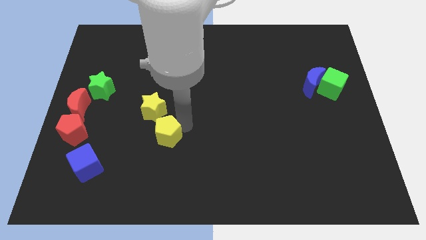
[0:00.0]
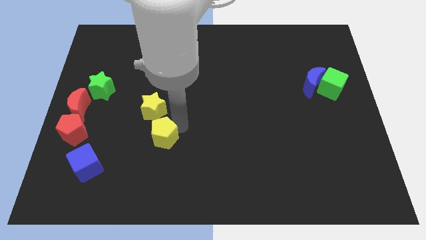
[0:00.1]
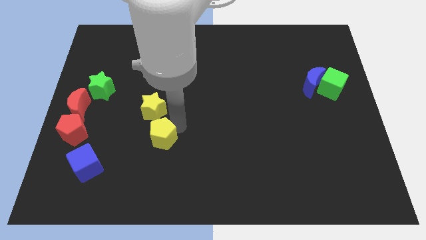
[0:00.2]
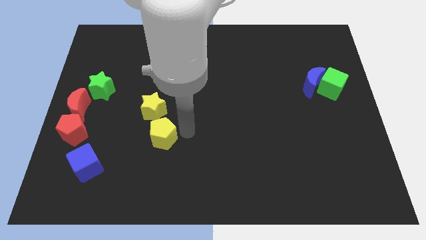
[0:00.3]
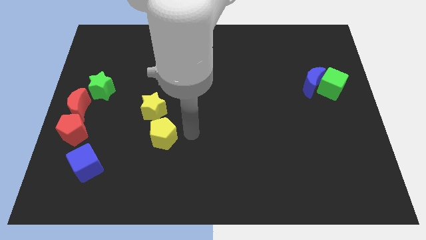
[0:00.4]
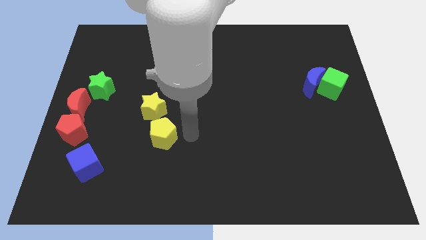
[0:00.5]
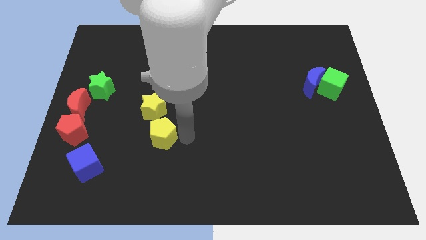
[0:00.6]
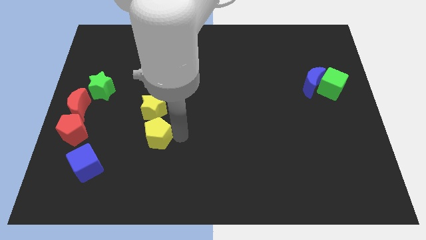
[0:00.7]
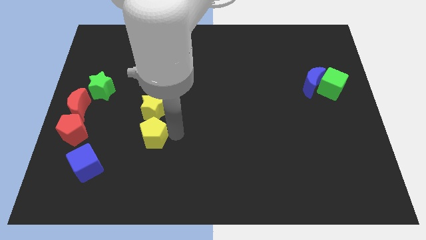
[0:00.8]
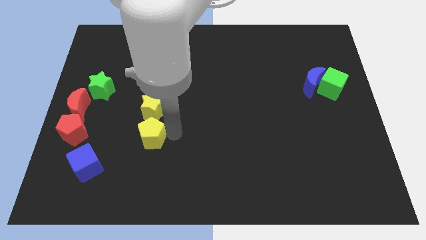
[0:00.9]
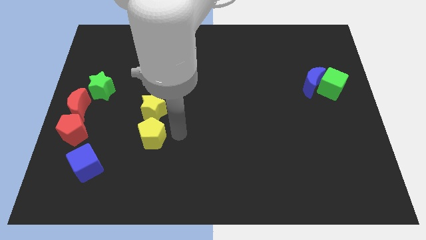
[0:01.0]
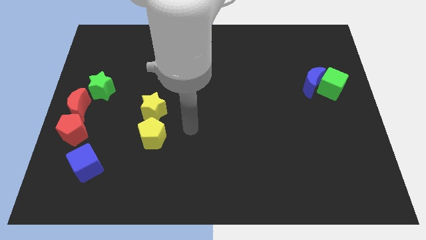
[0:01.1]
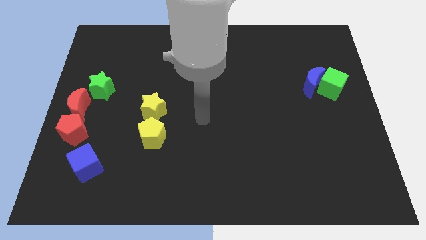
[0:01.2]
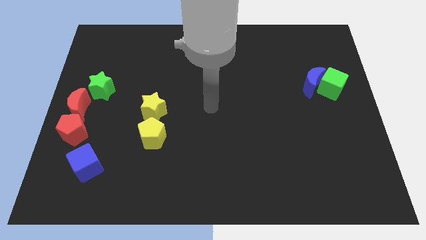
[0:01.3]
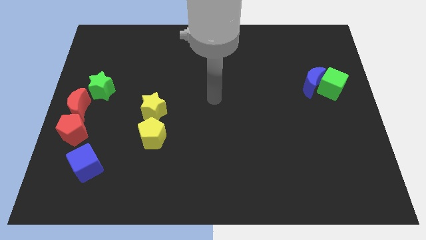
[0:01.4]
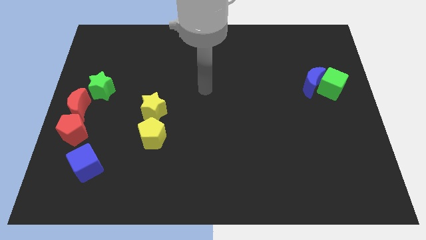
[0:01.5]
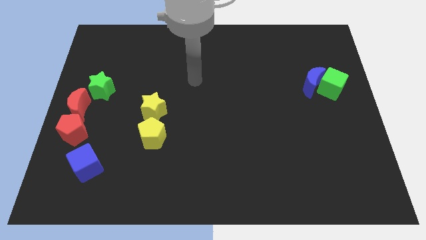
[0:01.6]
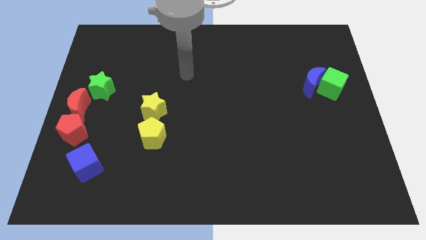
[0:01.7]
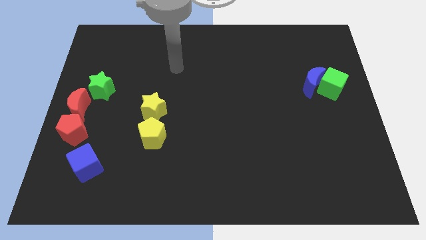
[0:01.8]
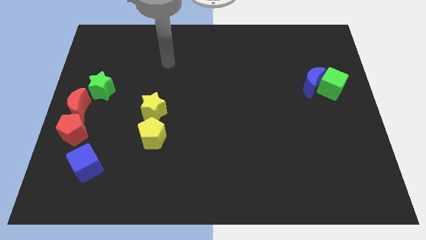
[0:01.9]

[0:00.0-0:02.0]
place the yellow pentagon below the yellow star

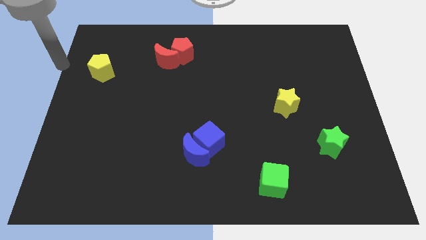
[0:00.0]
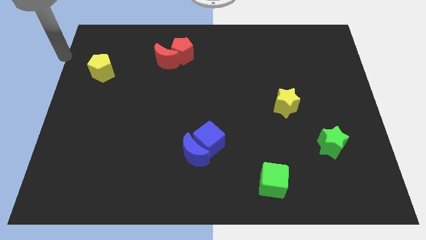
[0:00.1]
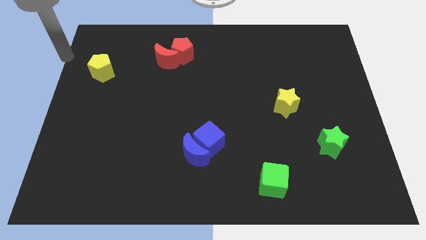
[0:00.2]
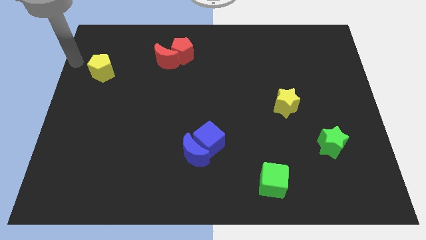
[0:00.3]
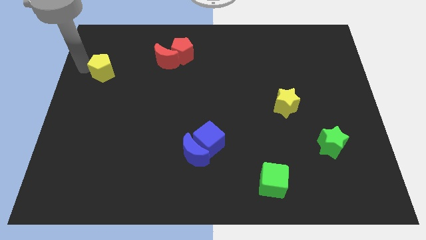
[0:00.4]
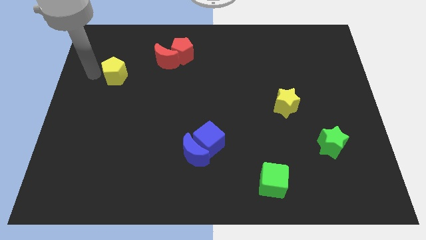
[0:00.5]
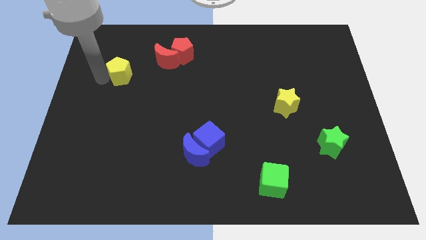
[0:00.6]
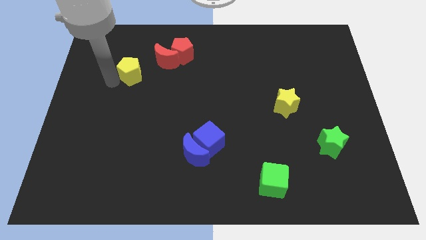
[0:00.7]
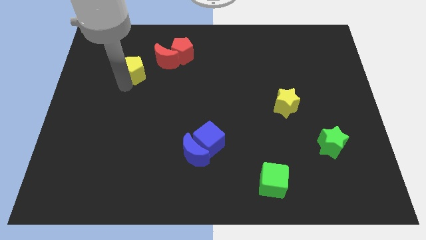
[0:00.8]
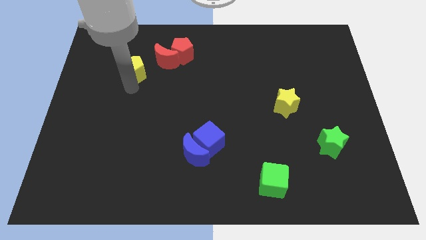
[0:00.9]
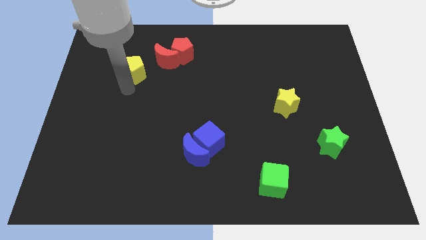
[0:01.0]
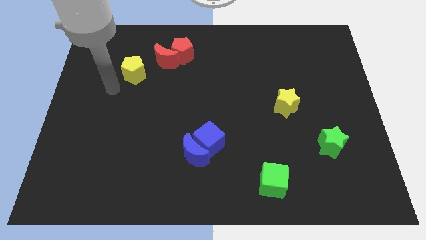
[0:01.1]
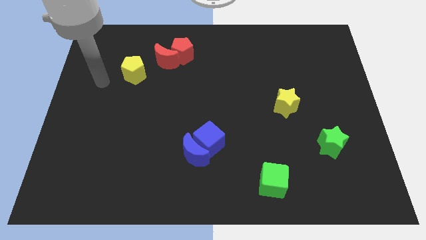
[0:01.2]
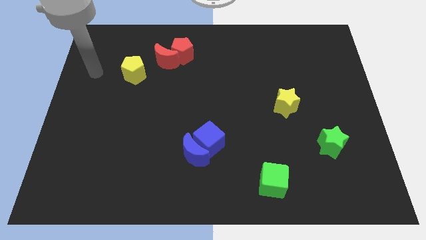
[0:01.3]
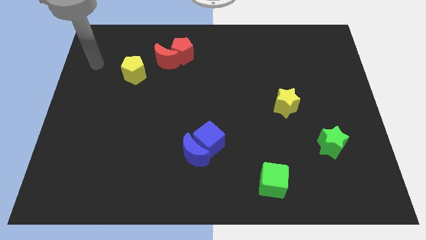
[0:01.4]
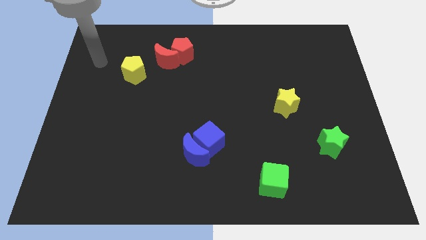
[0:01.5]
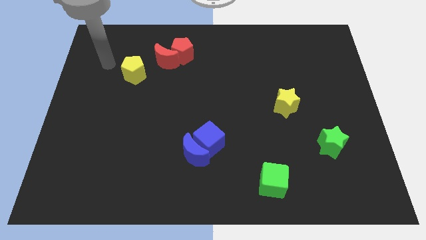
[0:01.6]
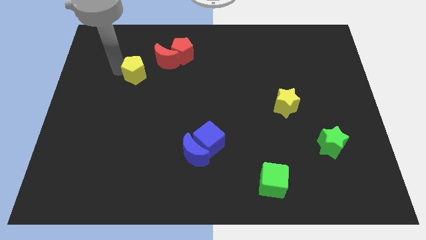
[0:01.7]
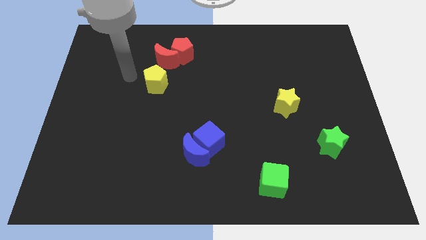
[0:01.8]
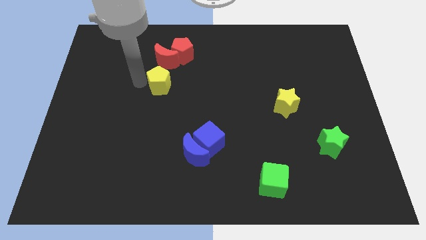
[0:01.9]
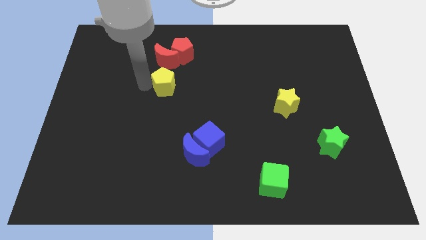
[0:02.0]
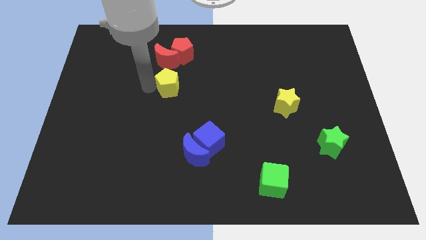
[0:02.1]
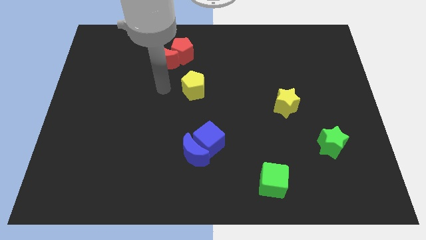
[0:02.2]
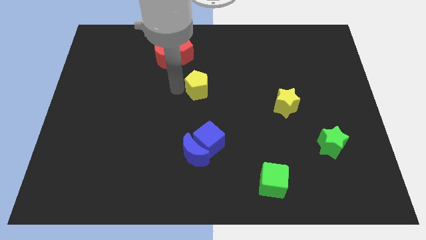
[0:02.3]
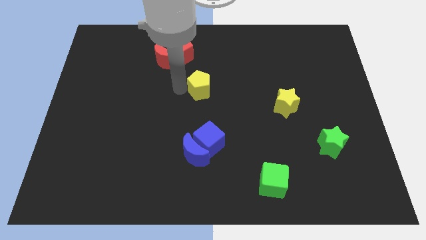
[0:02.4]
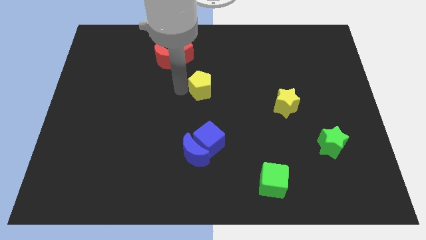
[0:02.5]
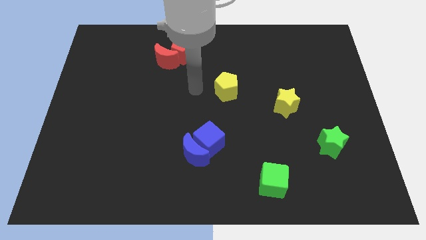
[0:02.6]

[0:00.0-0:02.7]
move the yellow pentagon towards the center of the board

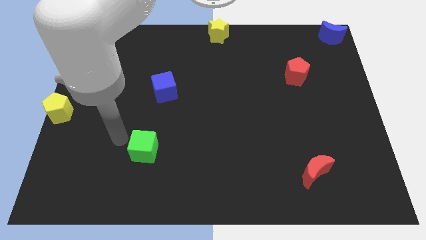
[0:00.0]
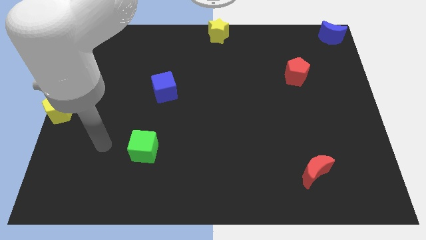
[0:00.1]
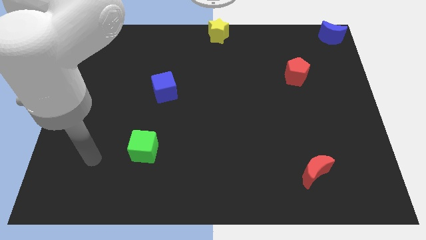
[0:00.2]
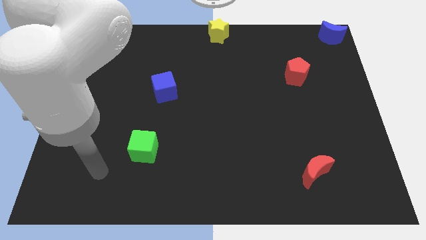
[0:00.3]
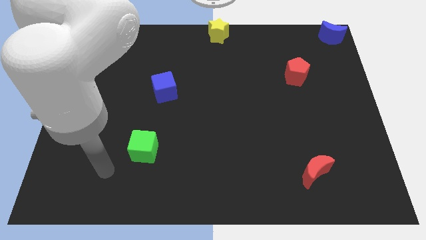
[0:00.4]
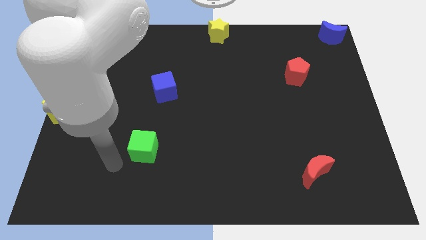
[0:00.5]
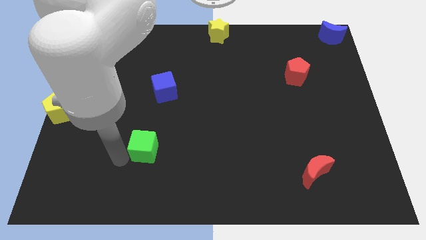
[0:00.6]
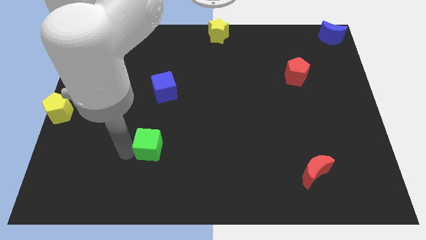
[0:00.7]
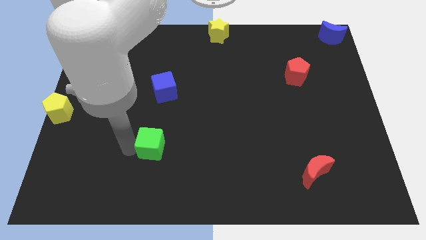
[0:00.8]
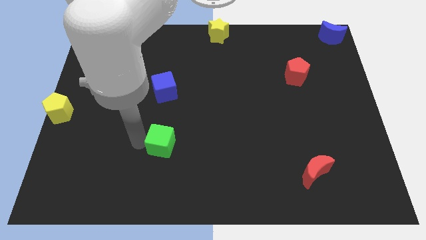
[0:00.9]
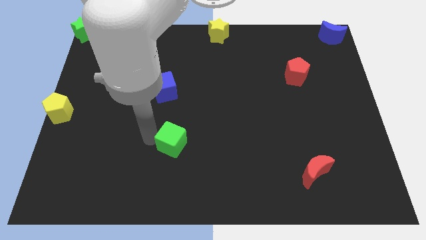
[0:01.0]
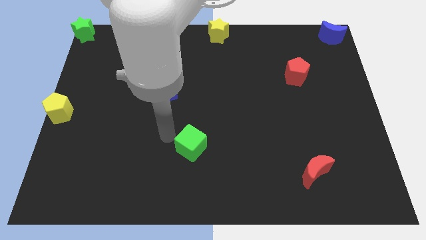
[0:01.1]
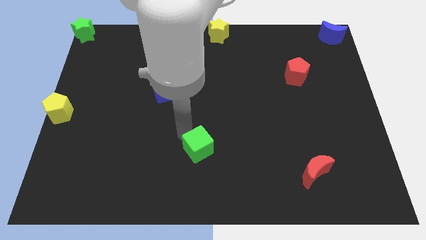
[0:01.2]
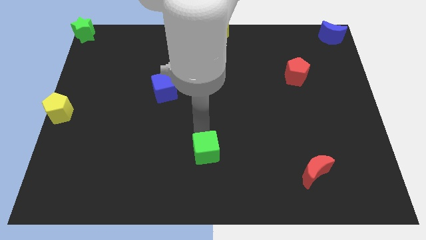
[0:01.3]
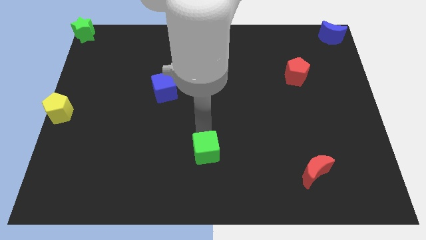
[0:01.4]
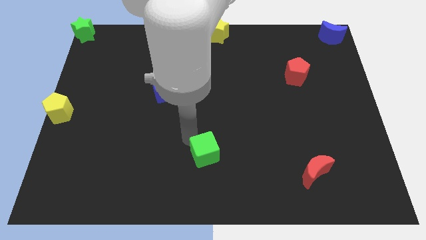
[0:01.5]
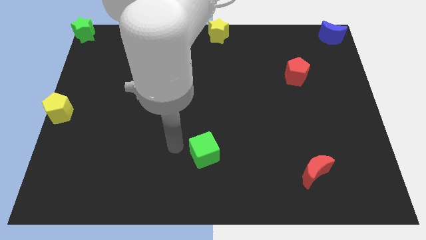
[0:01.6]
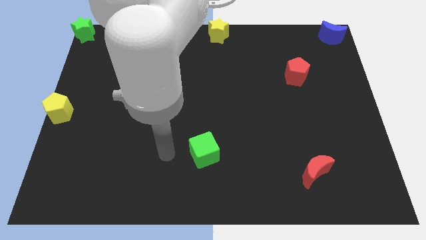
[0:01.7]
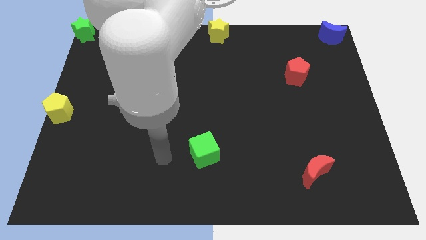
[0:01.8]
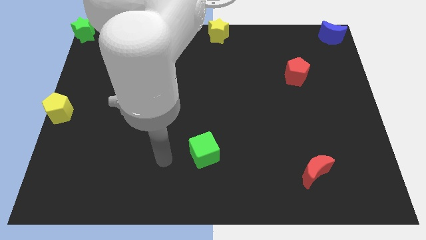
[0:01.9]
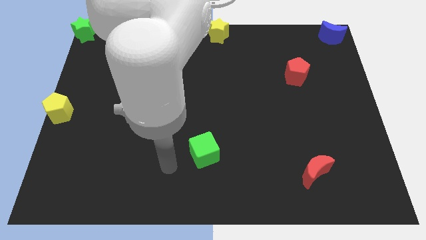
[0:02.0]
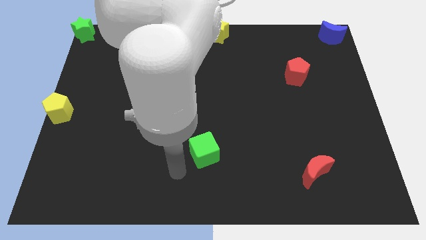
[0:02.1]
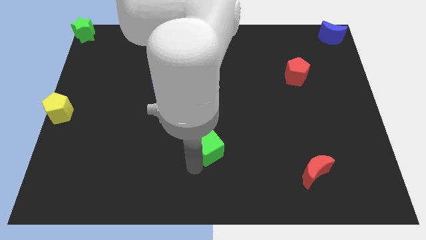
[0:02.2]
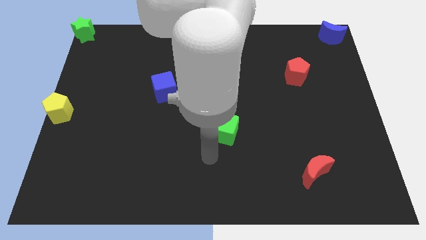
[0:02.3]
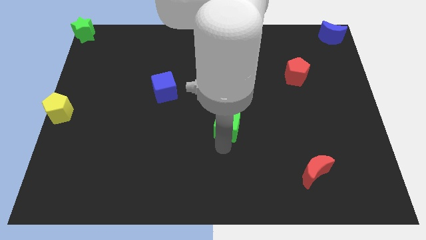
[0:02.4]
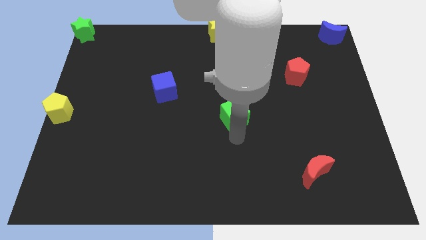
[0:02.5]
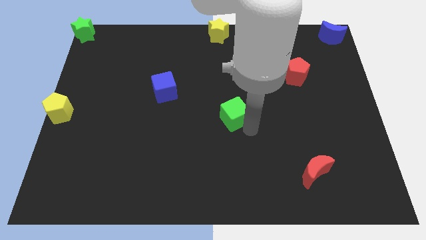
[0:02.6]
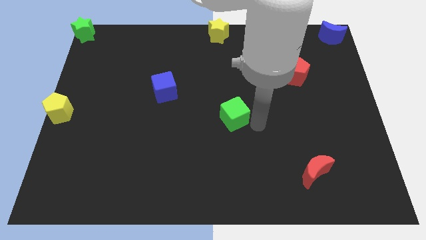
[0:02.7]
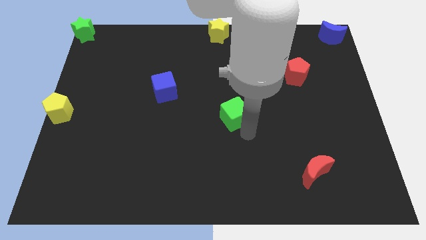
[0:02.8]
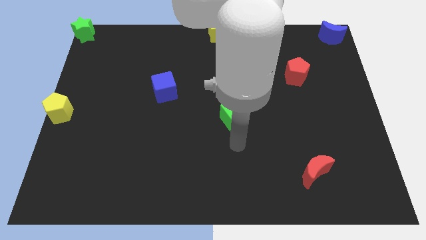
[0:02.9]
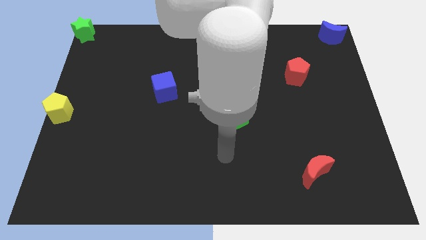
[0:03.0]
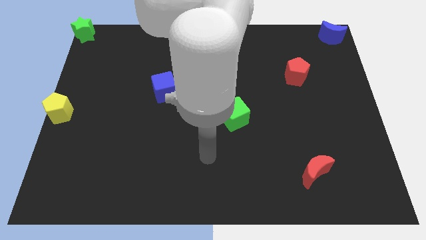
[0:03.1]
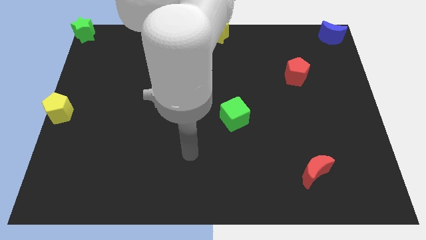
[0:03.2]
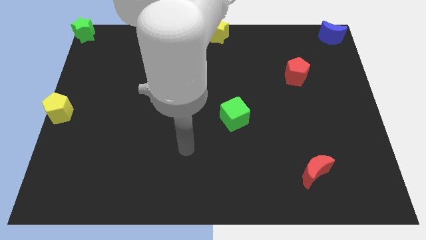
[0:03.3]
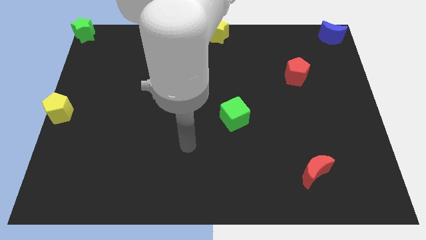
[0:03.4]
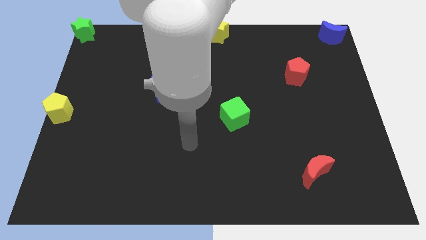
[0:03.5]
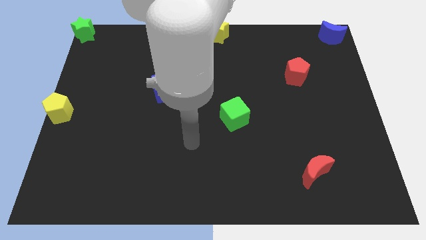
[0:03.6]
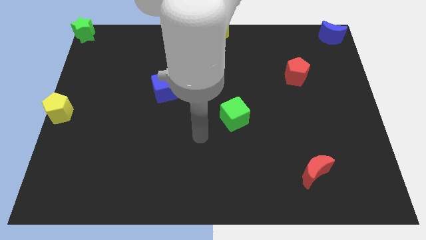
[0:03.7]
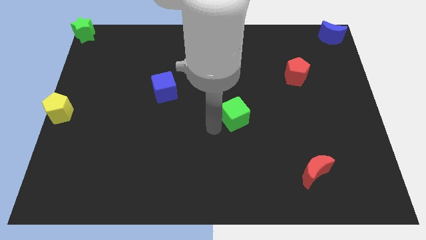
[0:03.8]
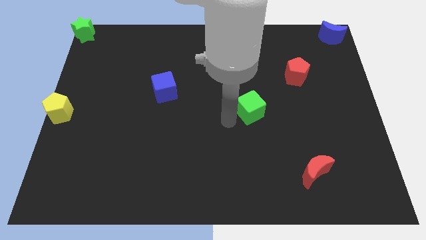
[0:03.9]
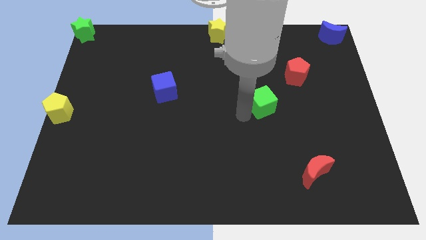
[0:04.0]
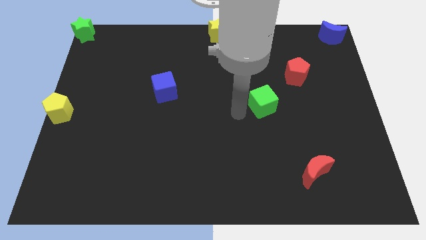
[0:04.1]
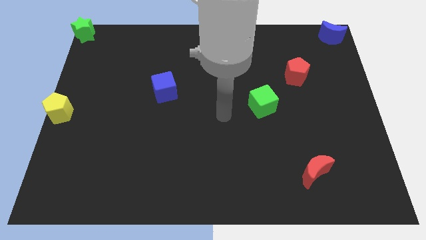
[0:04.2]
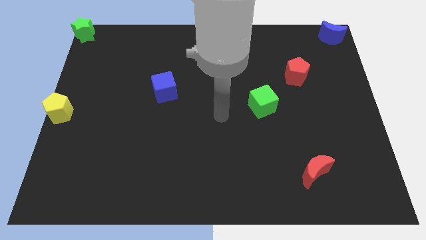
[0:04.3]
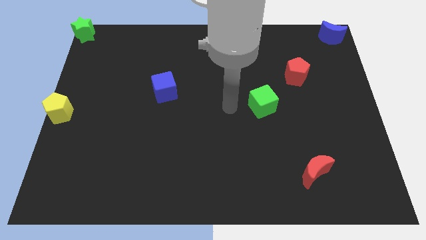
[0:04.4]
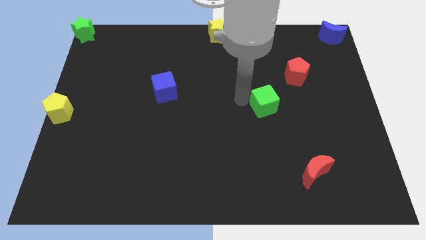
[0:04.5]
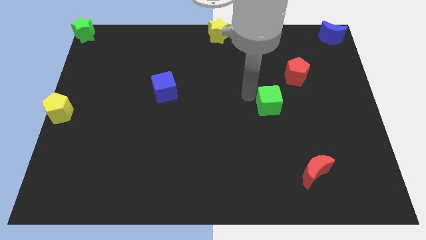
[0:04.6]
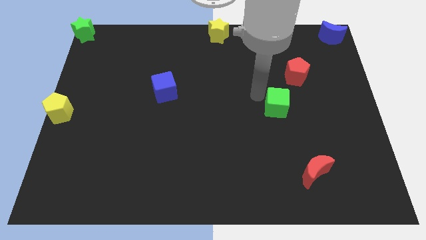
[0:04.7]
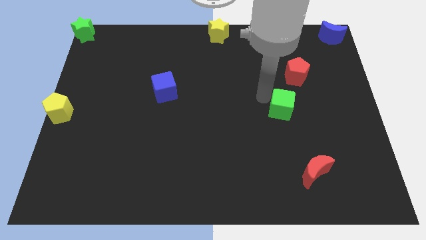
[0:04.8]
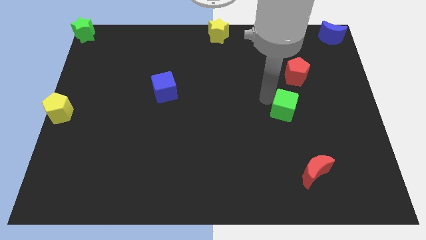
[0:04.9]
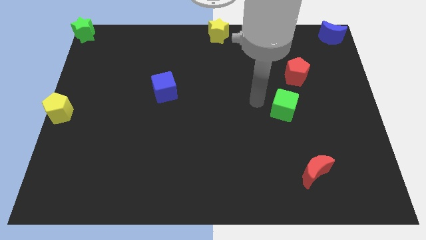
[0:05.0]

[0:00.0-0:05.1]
move green cube to bottom left of red pentagon
